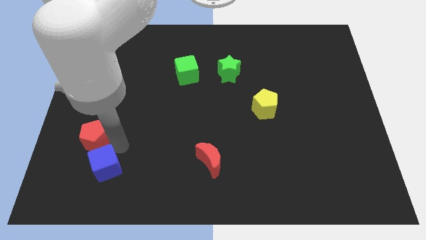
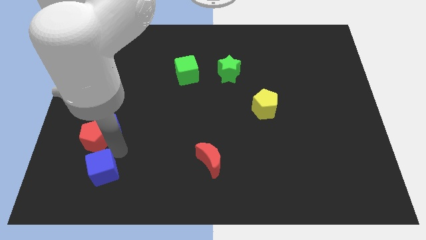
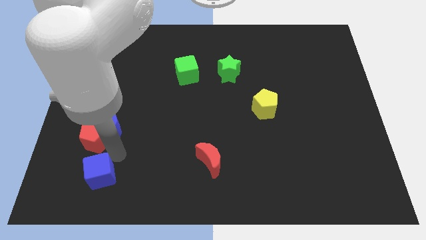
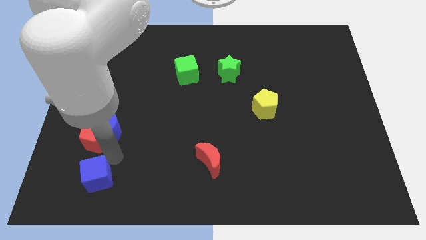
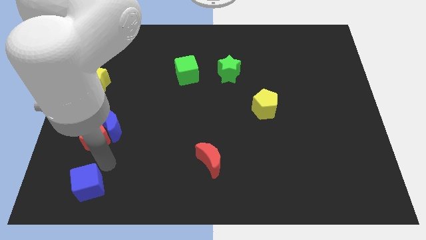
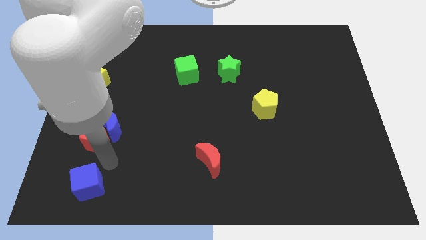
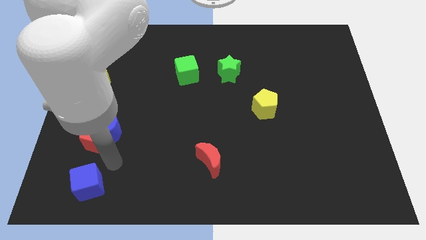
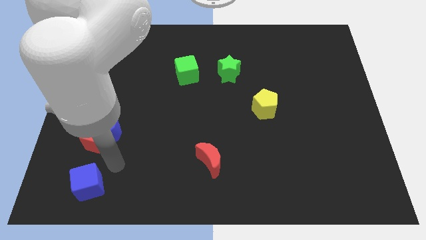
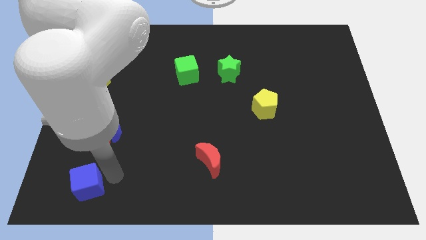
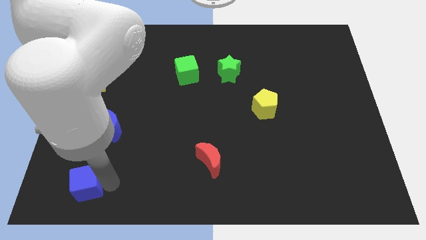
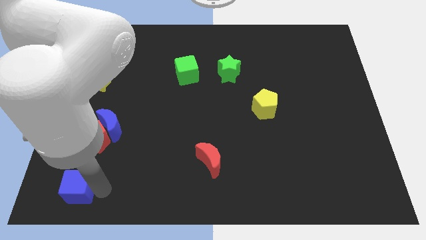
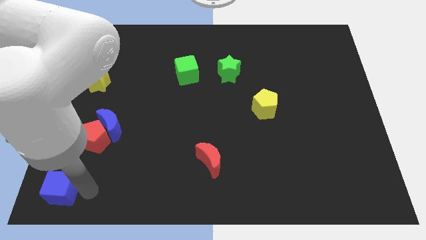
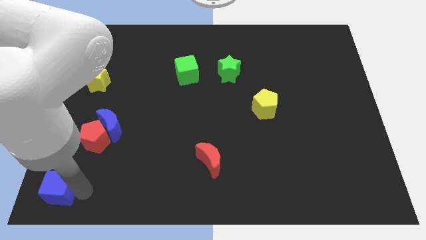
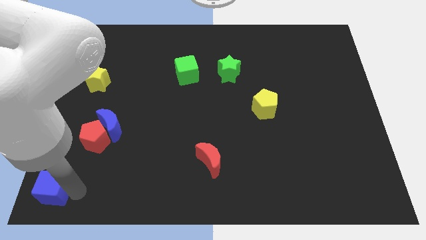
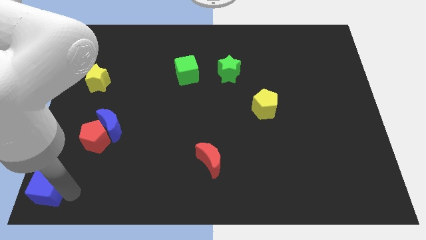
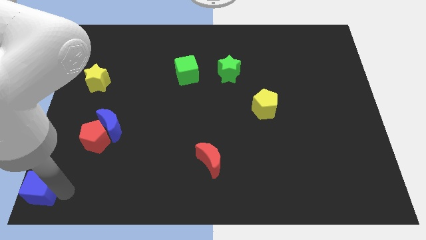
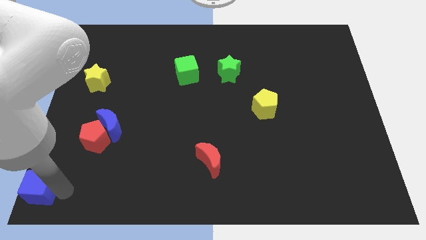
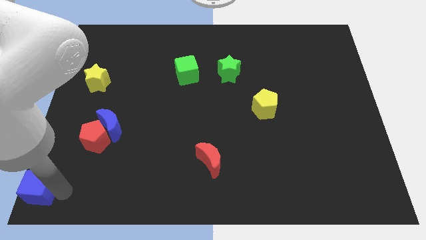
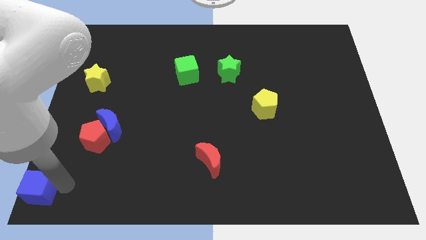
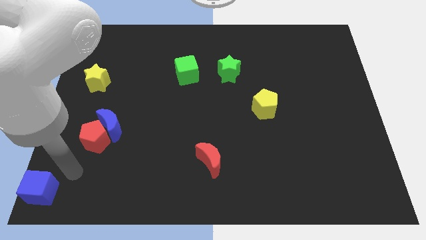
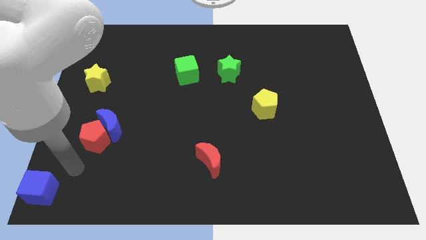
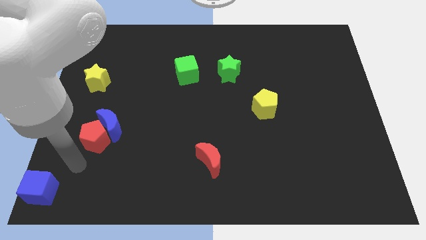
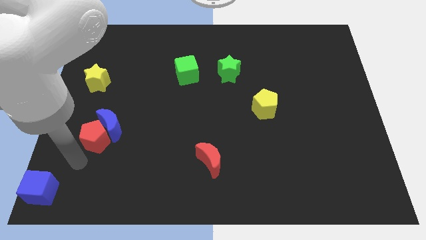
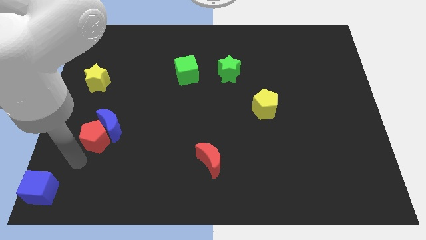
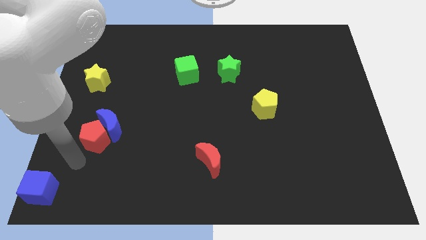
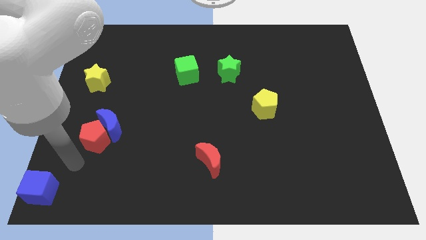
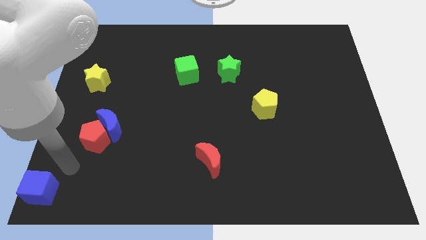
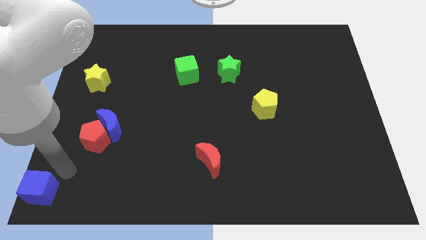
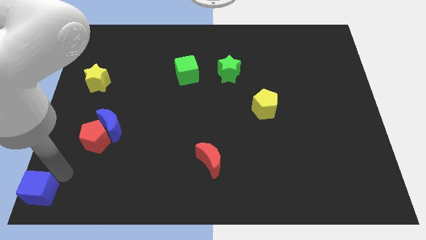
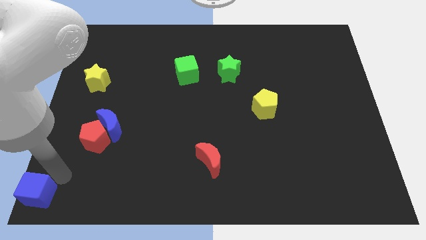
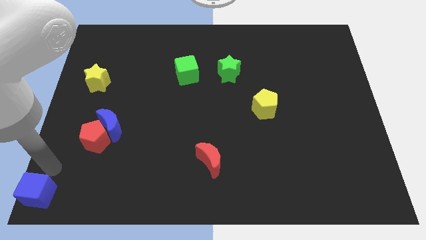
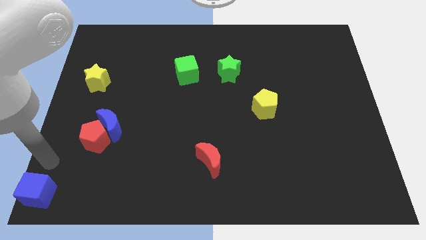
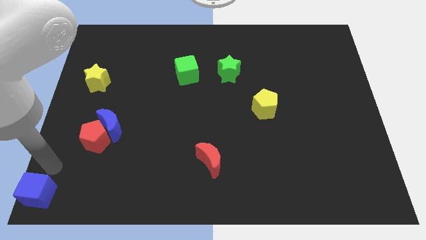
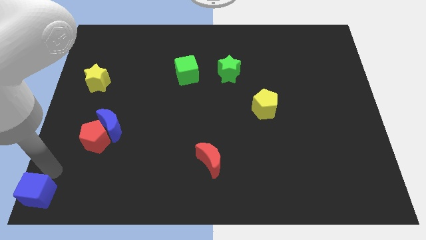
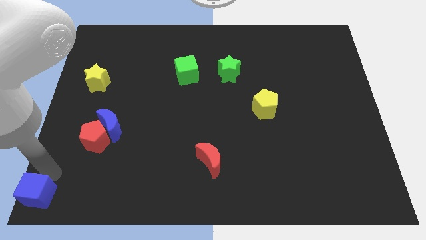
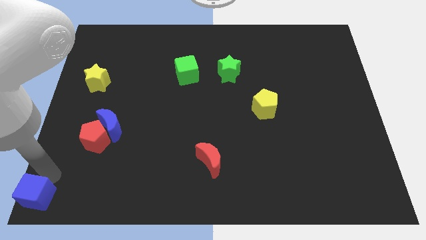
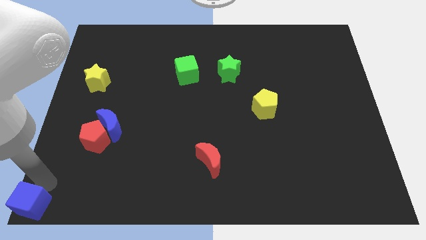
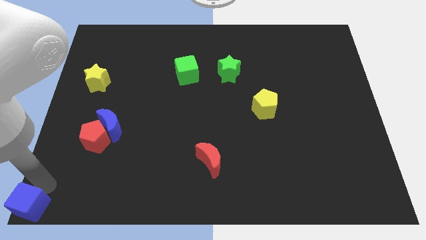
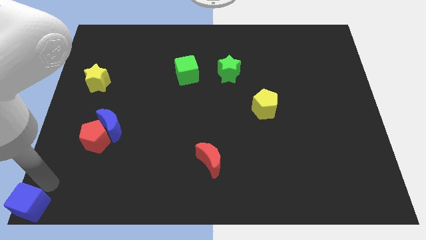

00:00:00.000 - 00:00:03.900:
push the blue cube to the bottom left of the board

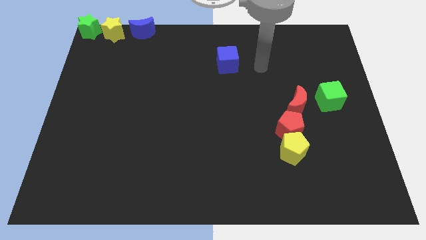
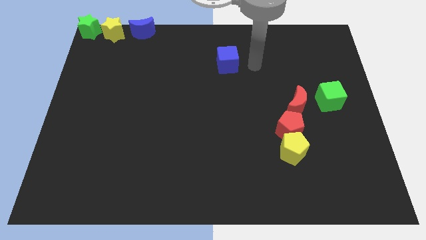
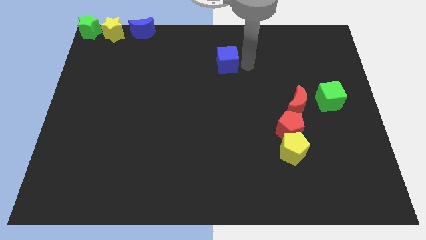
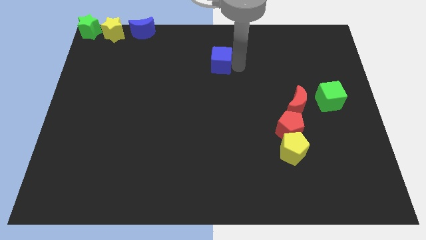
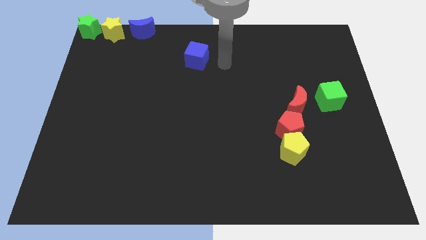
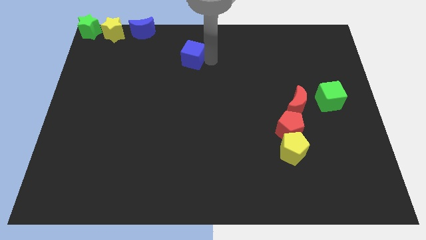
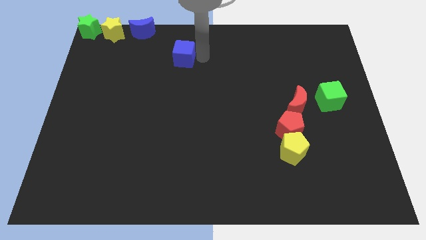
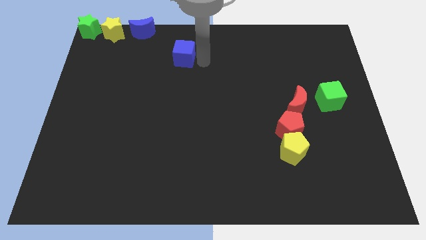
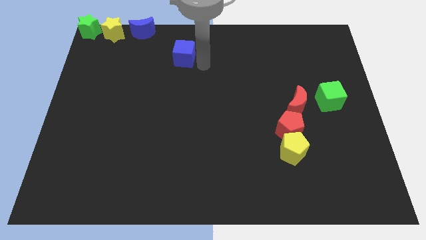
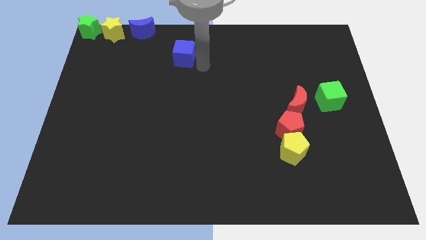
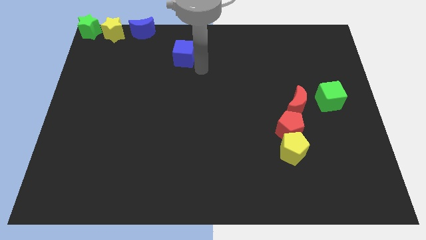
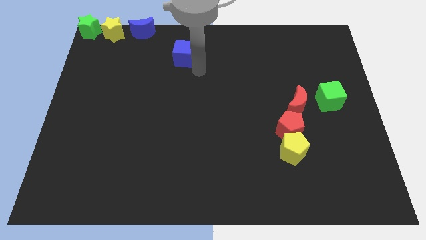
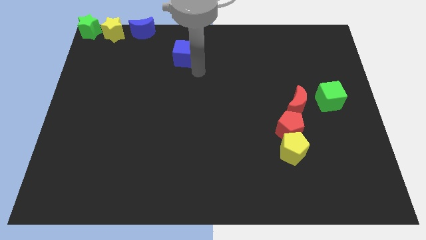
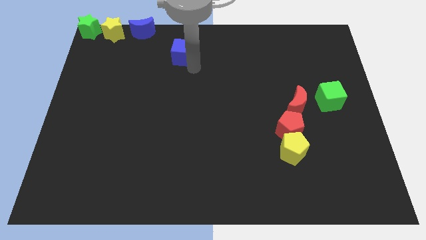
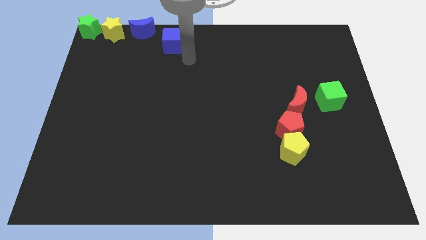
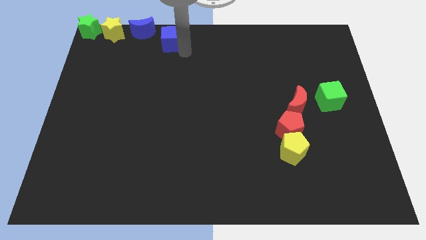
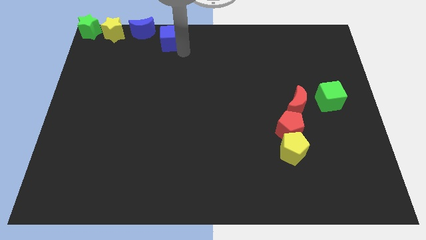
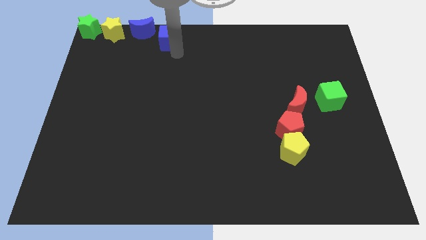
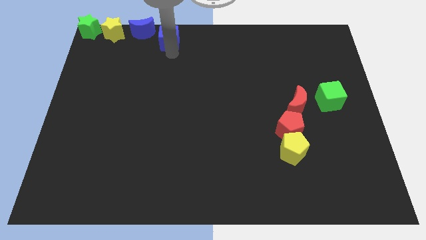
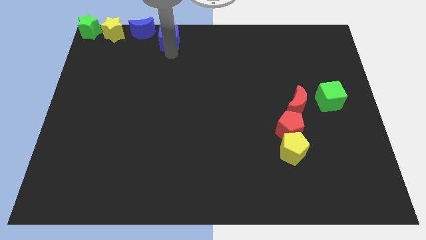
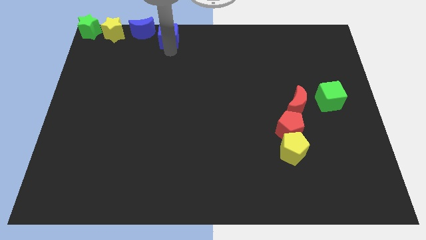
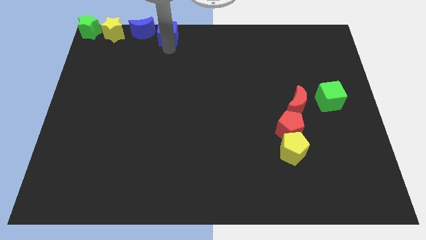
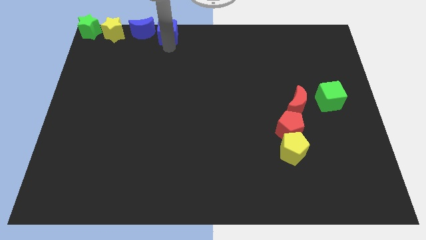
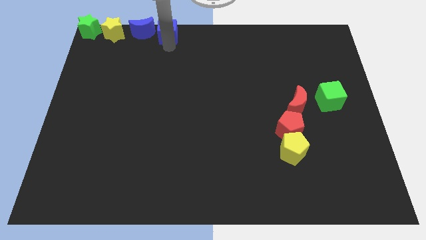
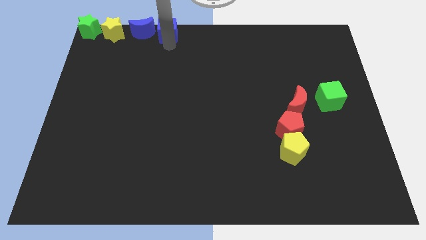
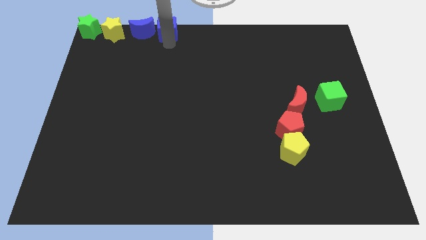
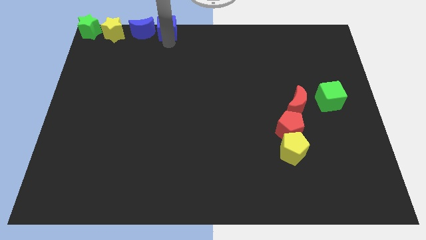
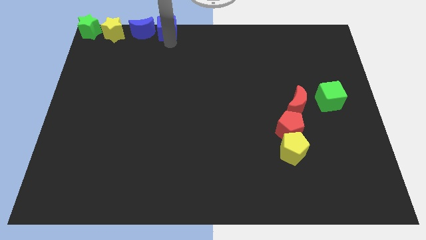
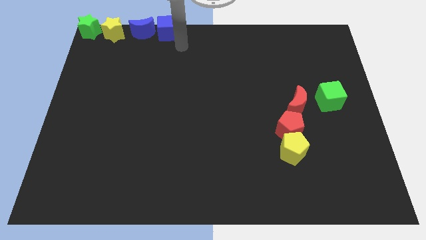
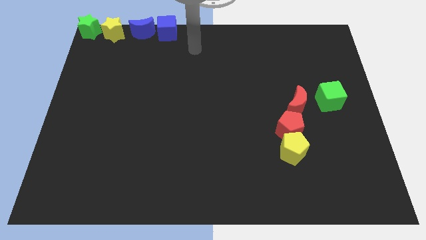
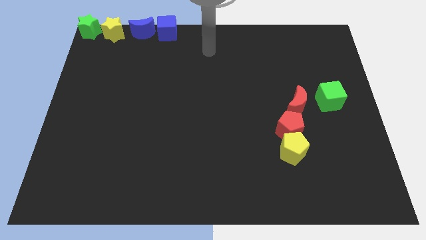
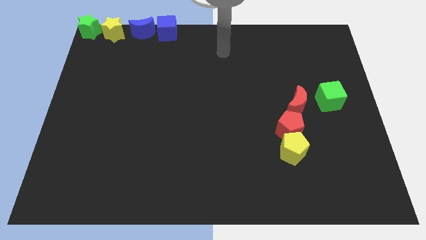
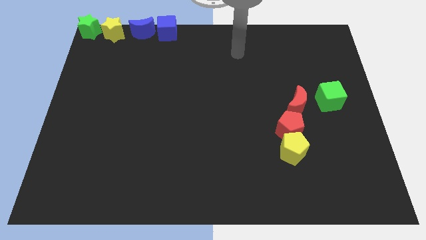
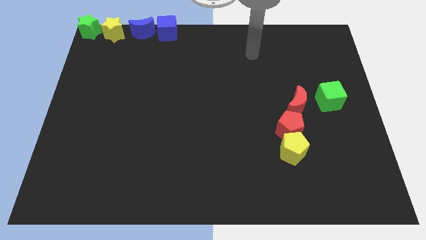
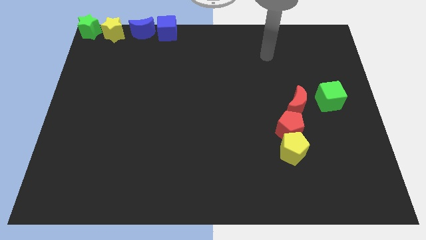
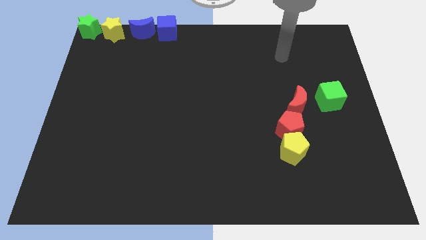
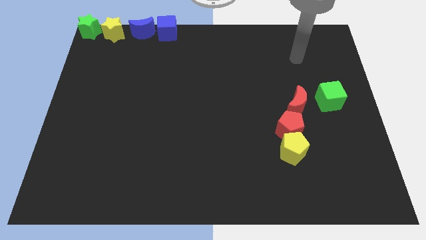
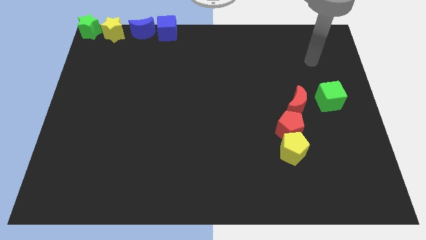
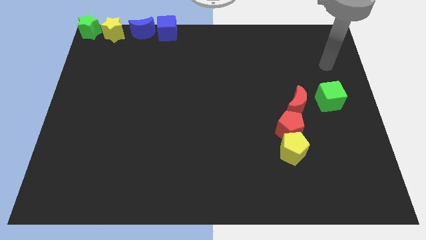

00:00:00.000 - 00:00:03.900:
move the blue cube to the right side of the blue moon

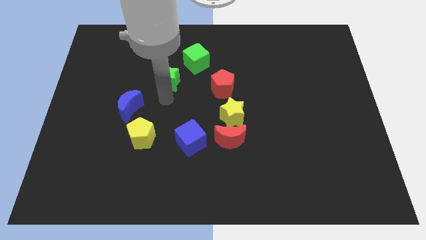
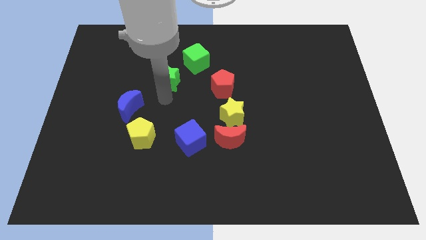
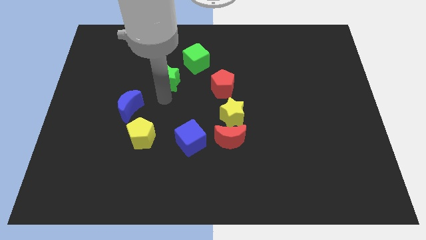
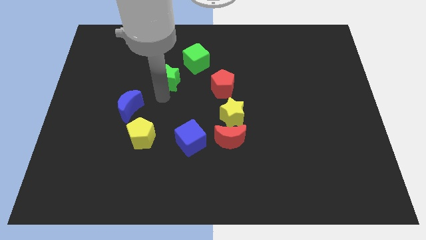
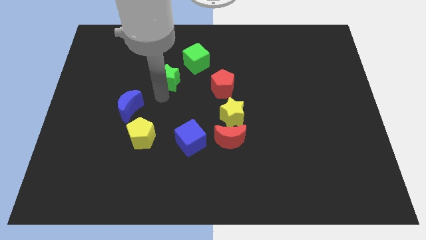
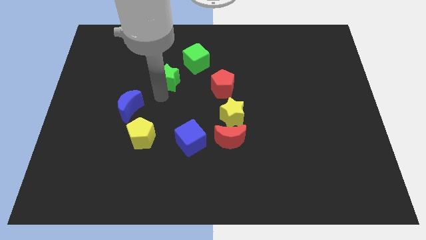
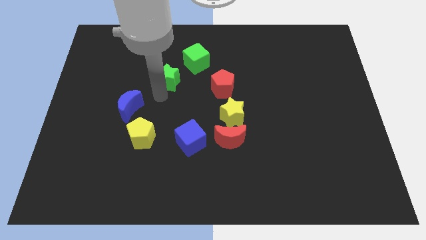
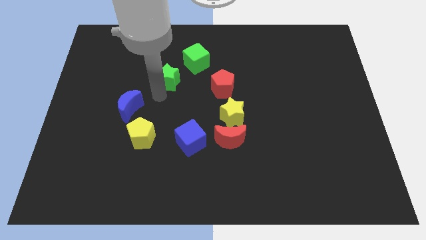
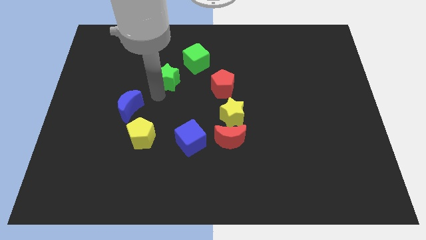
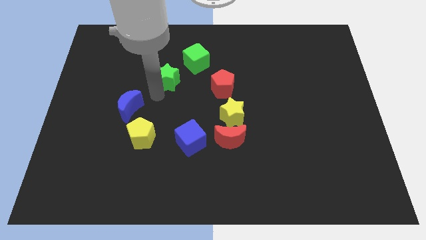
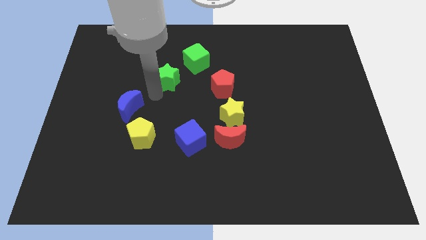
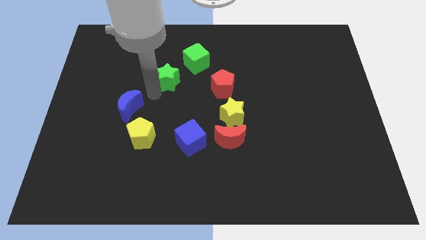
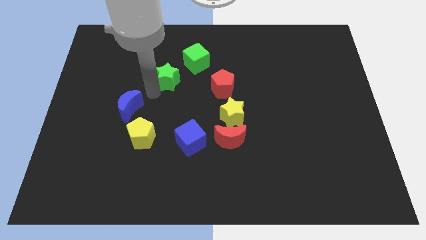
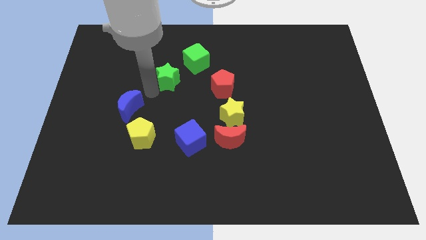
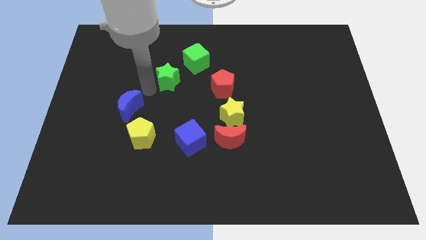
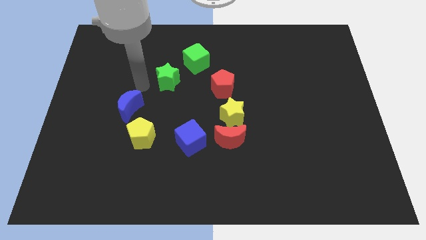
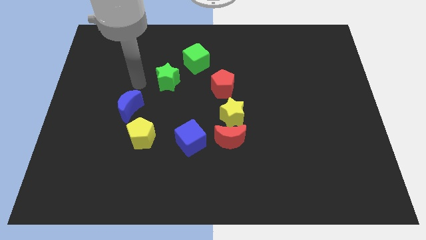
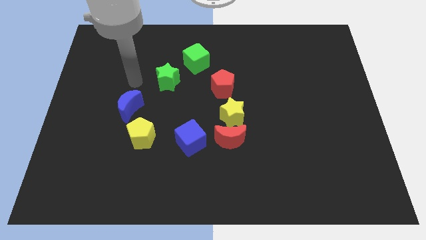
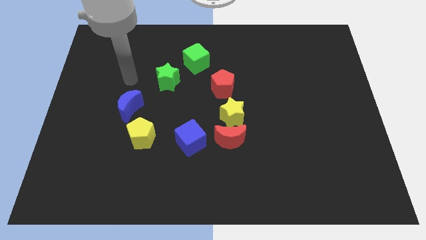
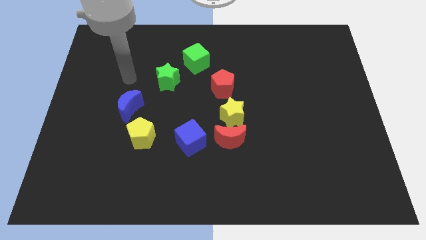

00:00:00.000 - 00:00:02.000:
move green star slightly to the top side
